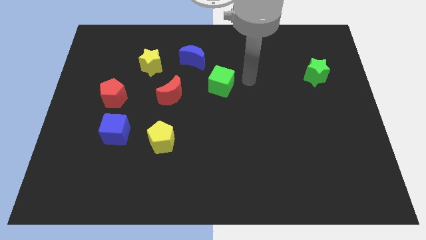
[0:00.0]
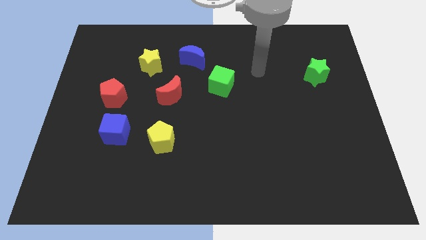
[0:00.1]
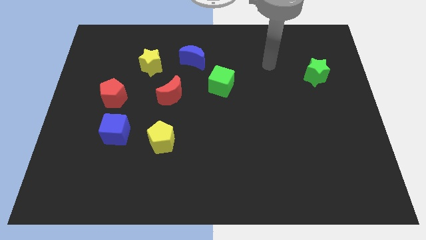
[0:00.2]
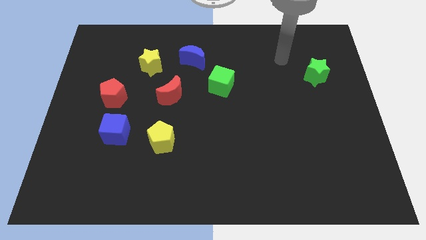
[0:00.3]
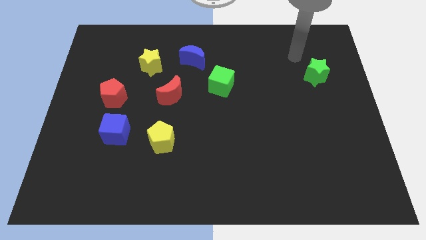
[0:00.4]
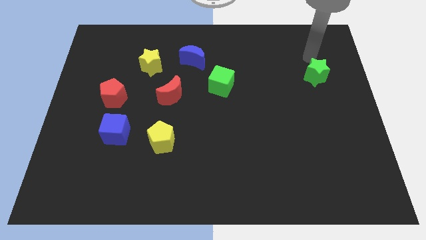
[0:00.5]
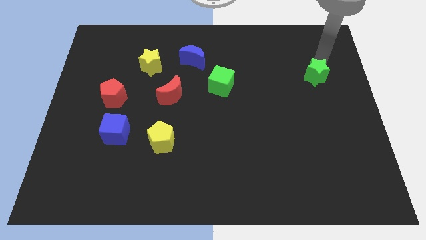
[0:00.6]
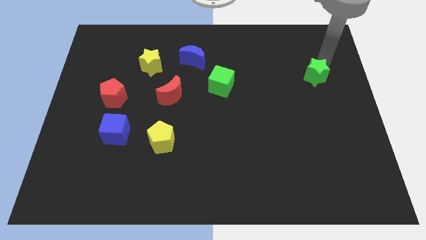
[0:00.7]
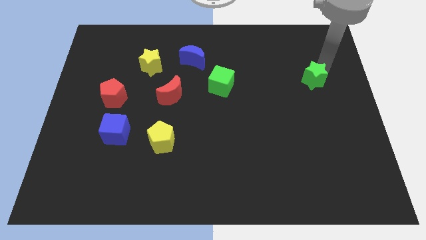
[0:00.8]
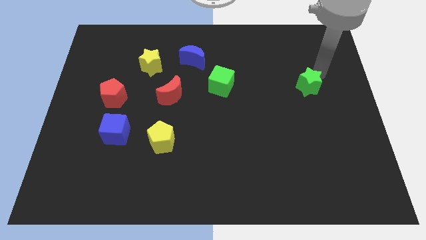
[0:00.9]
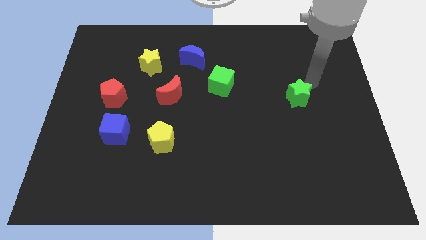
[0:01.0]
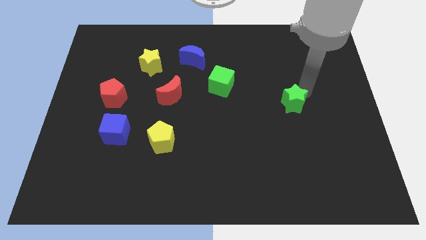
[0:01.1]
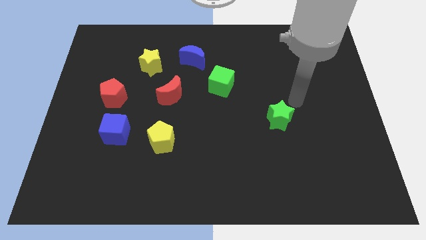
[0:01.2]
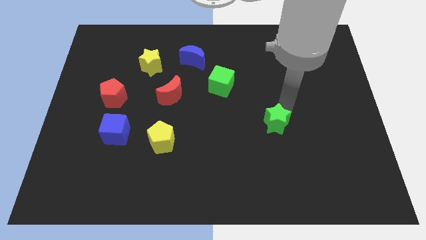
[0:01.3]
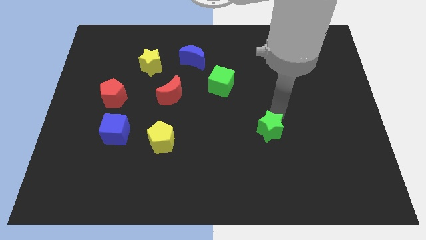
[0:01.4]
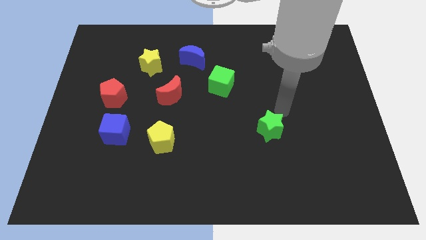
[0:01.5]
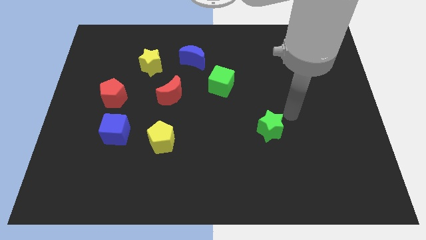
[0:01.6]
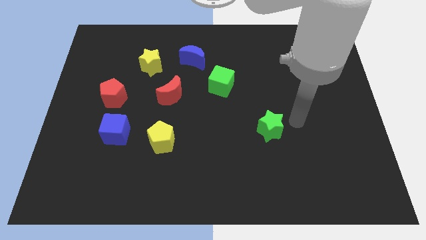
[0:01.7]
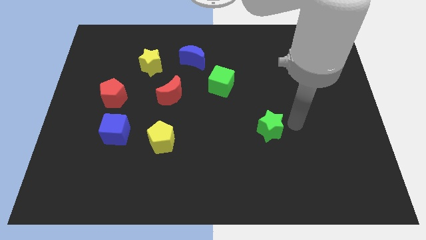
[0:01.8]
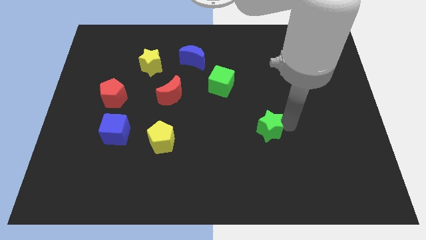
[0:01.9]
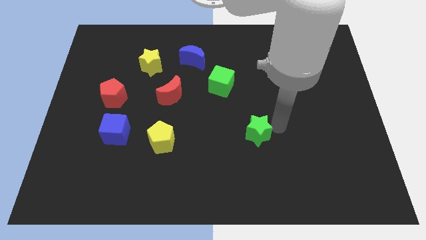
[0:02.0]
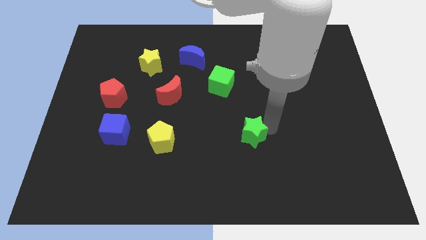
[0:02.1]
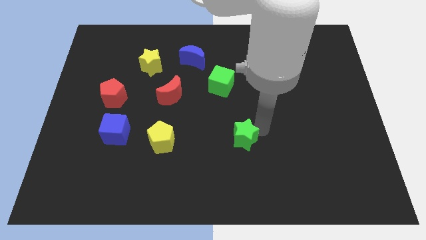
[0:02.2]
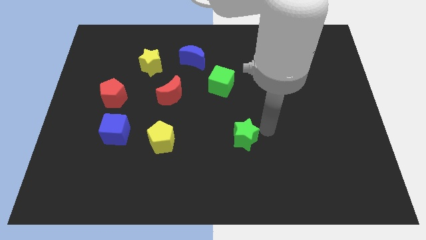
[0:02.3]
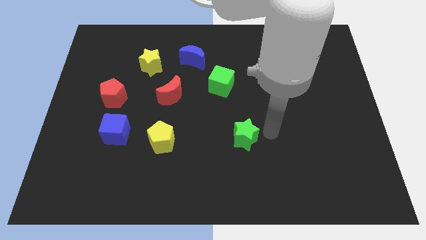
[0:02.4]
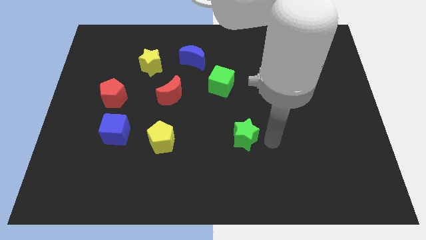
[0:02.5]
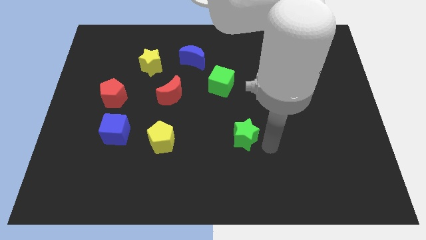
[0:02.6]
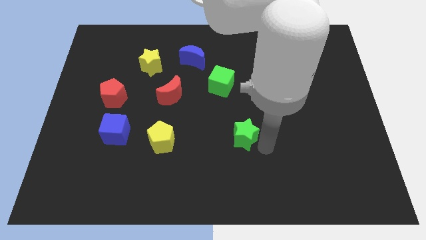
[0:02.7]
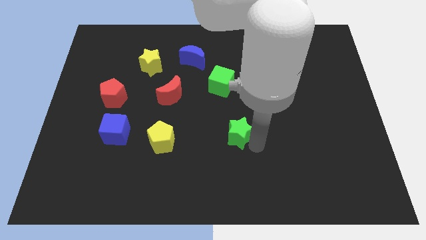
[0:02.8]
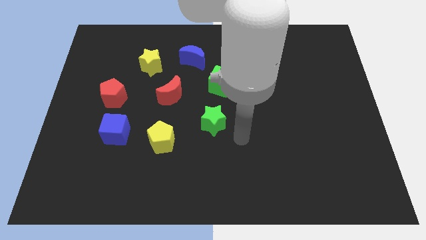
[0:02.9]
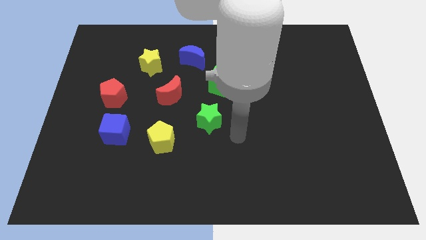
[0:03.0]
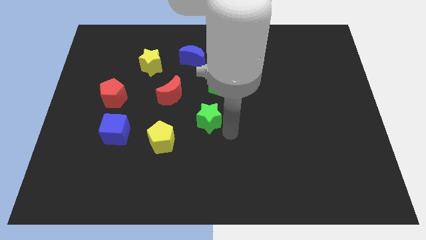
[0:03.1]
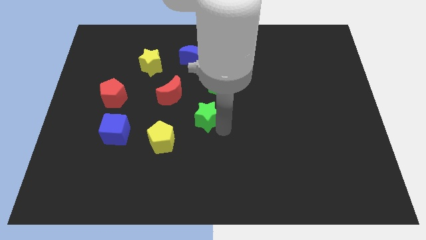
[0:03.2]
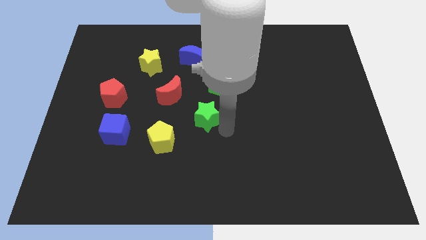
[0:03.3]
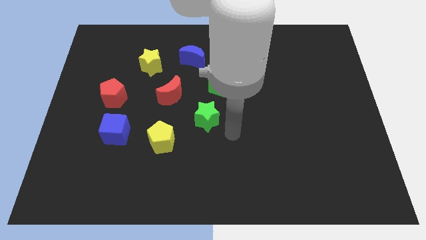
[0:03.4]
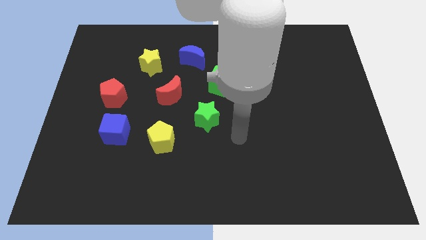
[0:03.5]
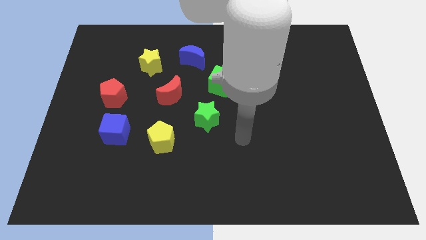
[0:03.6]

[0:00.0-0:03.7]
place the green star in between the yellow pentagon and the green cube

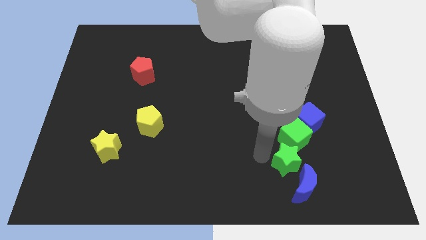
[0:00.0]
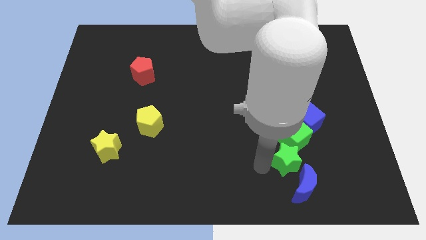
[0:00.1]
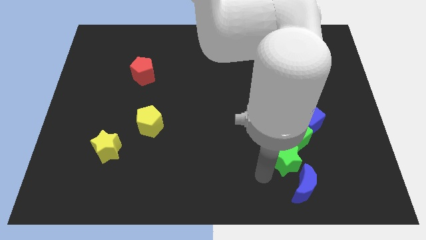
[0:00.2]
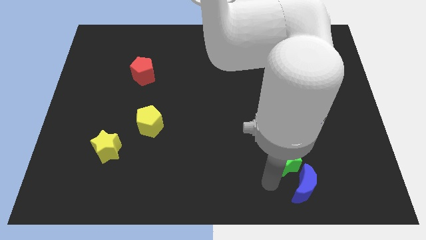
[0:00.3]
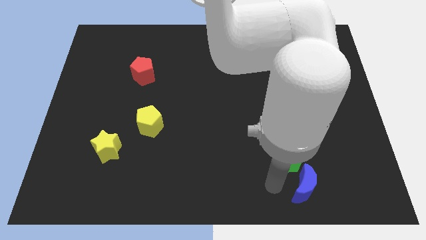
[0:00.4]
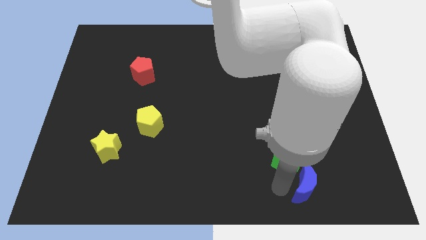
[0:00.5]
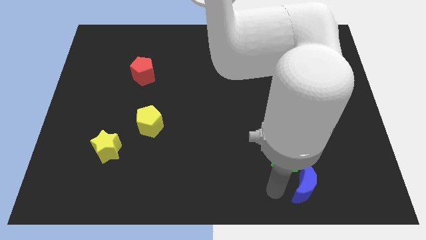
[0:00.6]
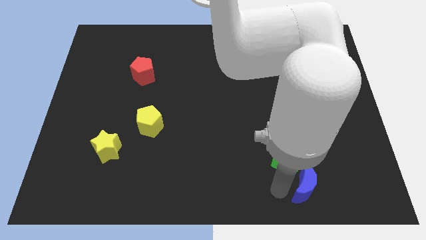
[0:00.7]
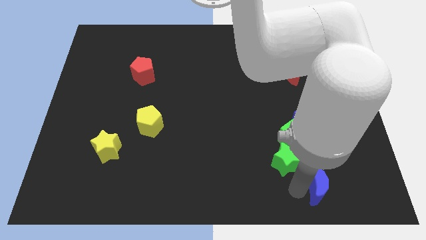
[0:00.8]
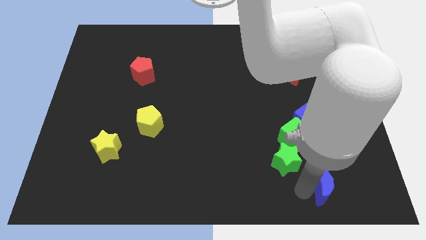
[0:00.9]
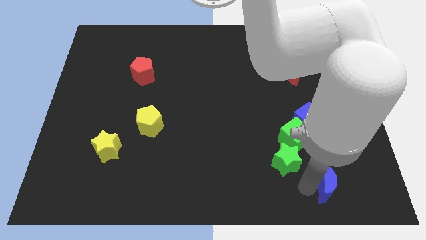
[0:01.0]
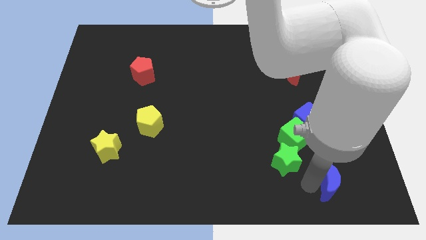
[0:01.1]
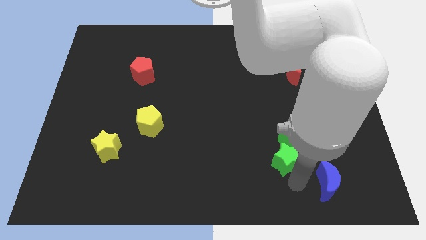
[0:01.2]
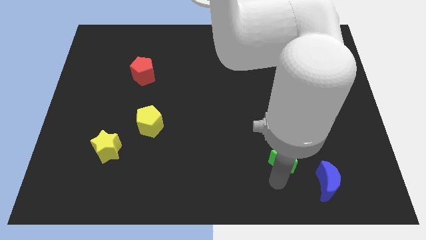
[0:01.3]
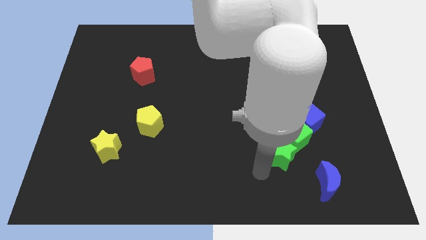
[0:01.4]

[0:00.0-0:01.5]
separate the blue moon from the group of object

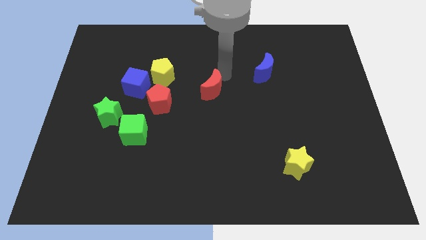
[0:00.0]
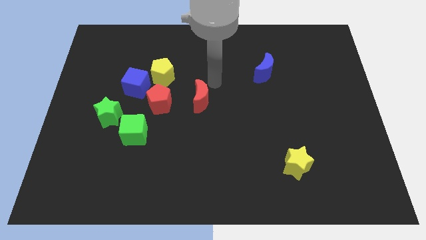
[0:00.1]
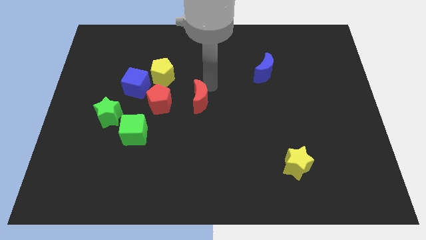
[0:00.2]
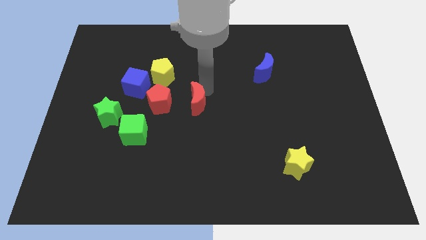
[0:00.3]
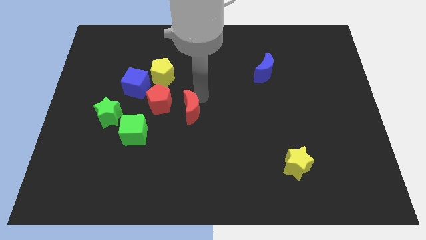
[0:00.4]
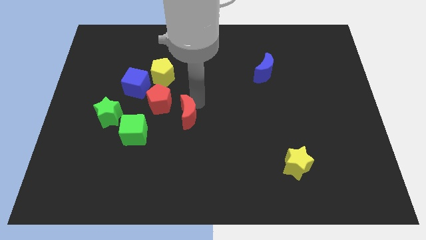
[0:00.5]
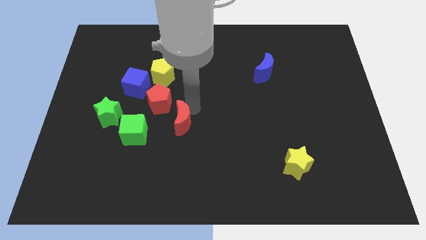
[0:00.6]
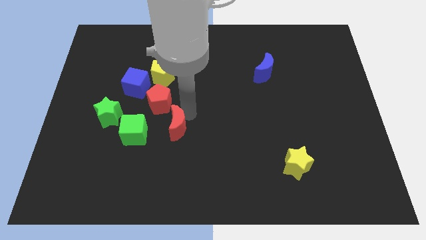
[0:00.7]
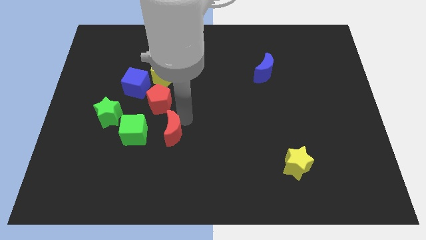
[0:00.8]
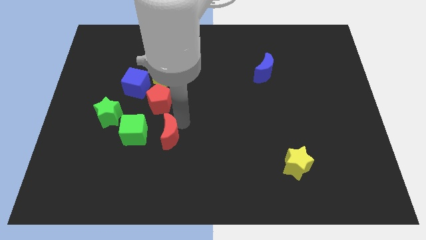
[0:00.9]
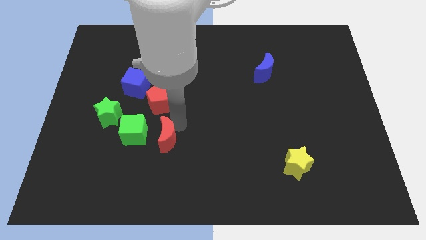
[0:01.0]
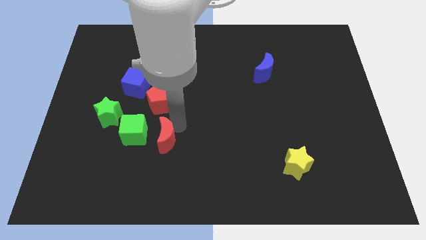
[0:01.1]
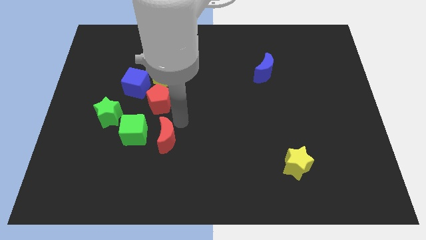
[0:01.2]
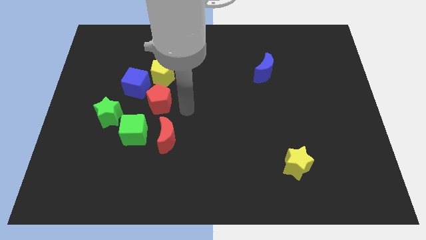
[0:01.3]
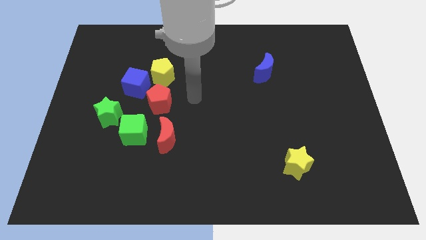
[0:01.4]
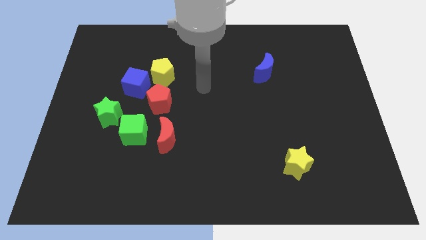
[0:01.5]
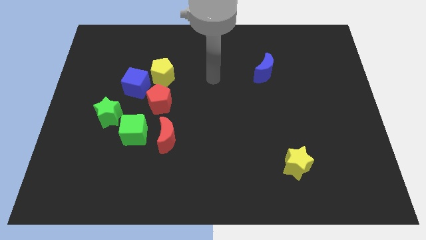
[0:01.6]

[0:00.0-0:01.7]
push red crescent towards the green cube

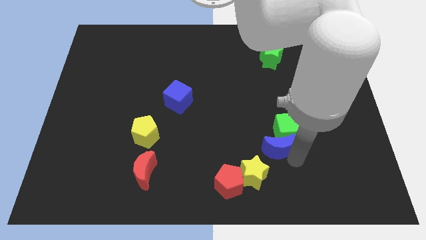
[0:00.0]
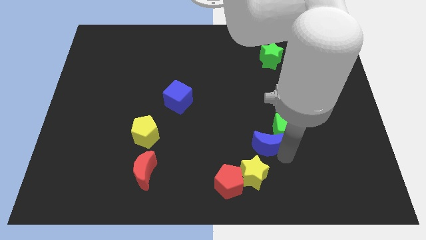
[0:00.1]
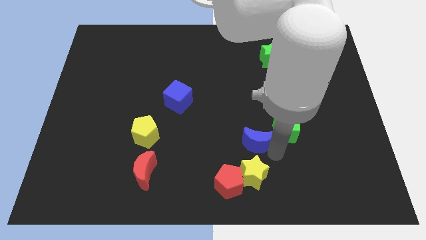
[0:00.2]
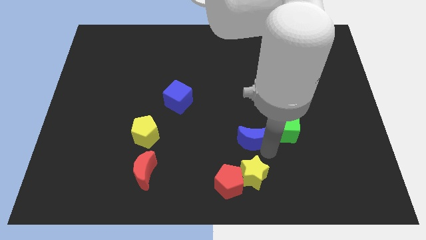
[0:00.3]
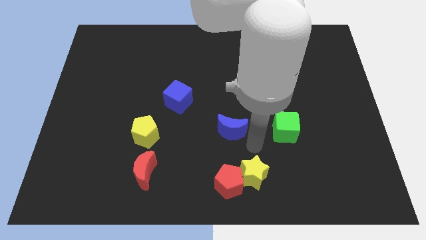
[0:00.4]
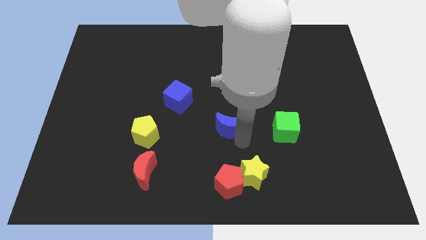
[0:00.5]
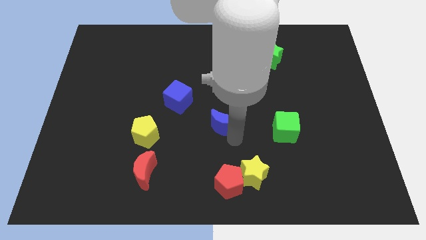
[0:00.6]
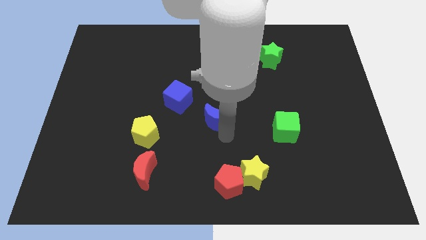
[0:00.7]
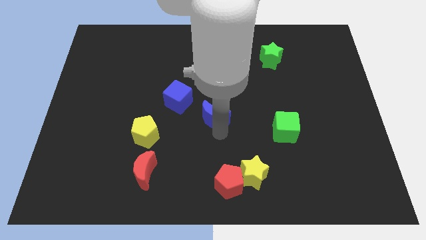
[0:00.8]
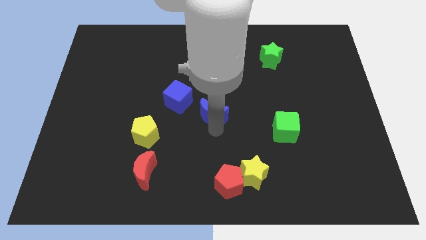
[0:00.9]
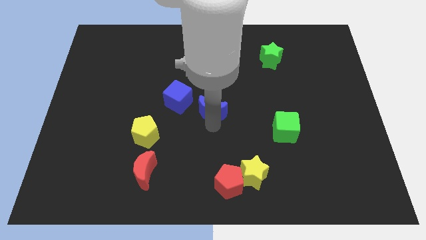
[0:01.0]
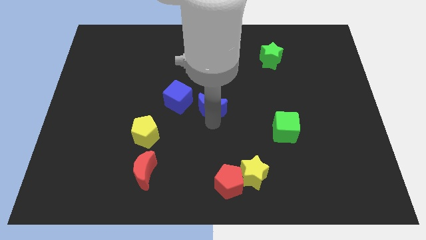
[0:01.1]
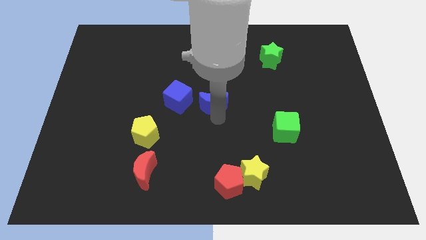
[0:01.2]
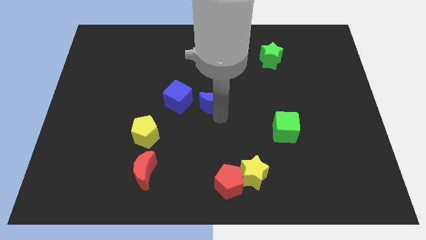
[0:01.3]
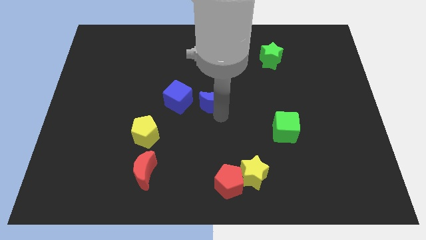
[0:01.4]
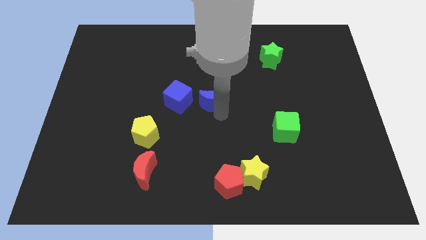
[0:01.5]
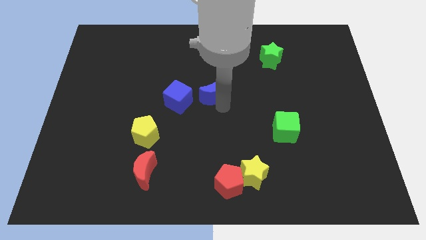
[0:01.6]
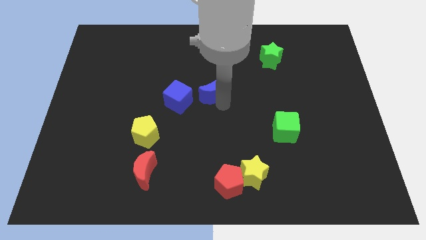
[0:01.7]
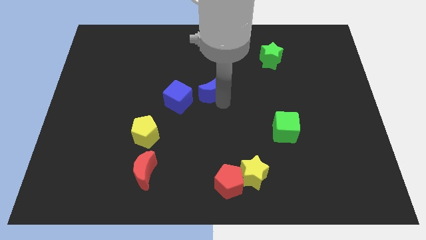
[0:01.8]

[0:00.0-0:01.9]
separate the blue moon from the green cube

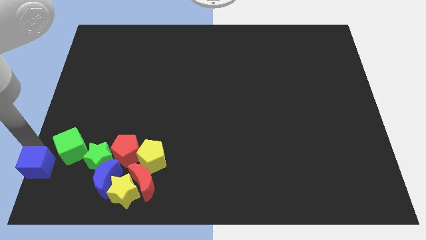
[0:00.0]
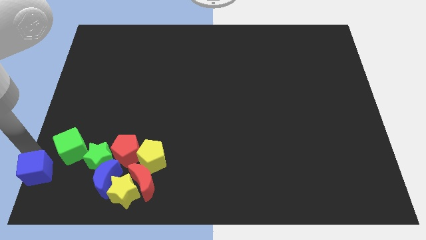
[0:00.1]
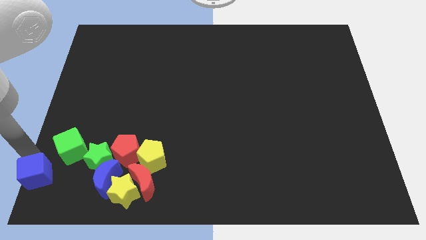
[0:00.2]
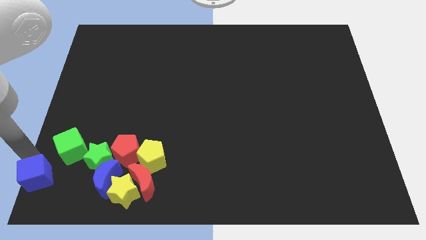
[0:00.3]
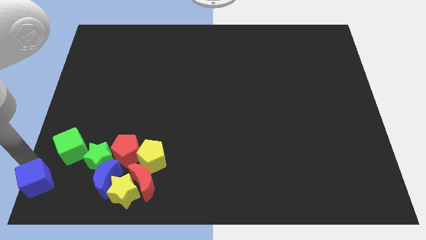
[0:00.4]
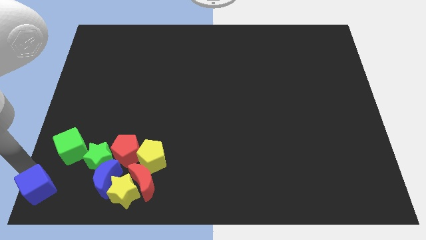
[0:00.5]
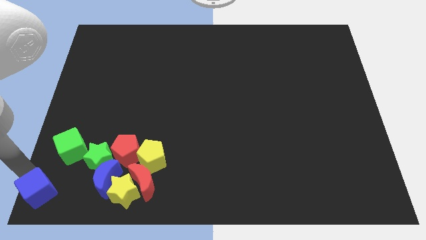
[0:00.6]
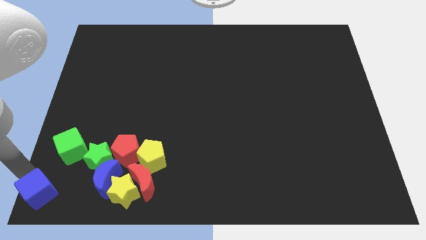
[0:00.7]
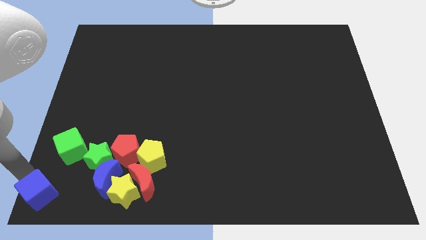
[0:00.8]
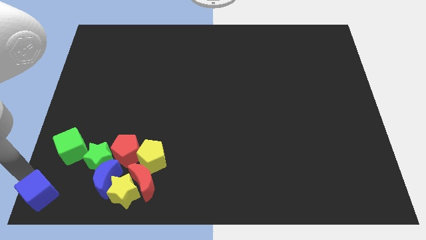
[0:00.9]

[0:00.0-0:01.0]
push the blue cube towards the bottom left corner of the board
